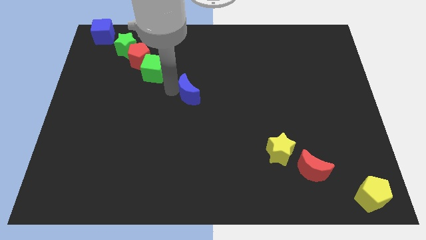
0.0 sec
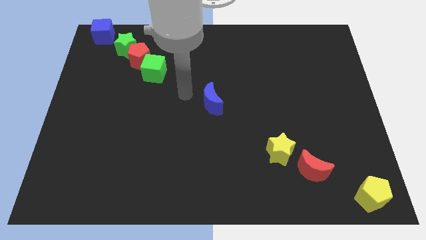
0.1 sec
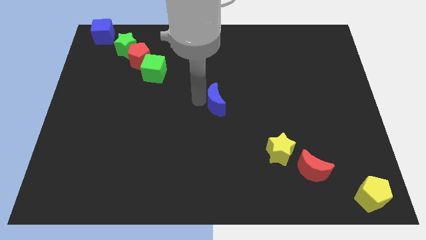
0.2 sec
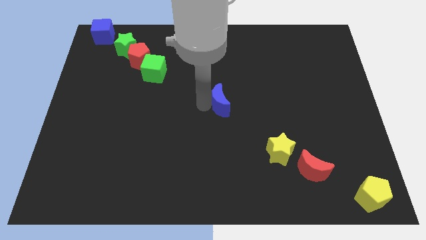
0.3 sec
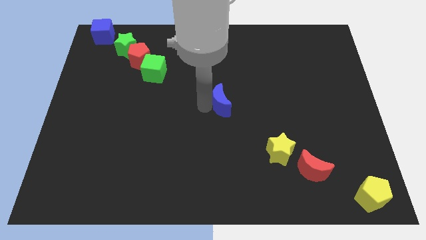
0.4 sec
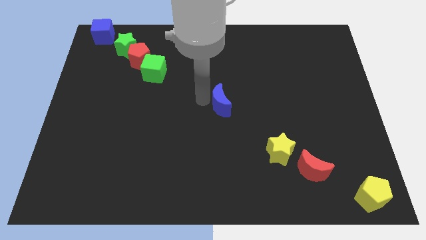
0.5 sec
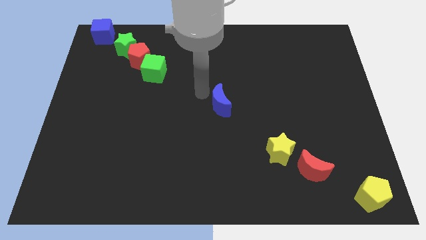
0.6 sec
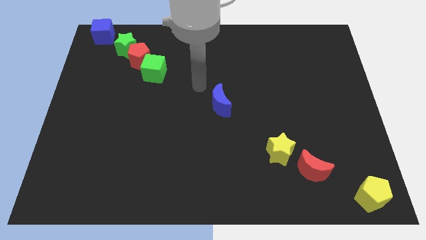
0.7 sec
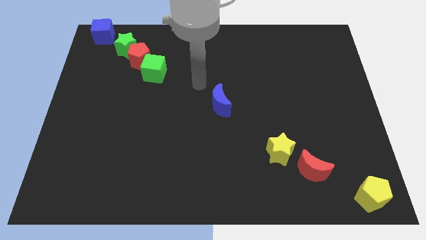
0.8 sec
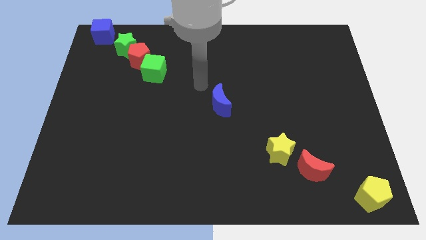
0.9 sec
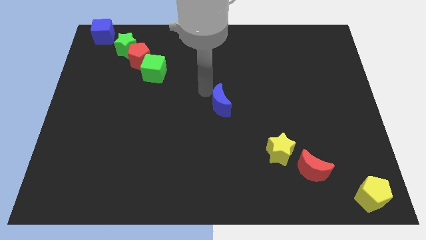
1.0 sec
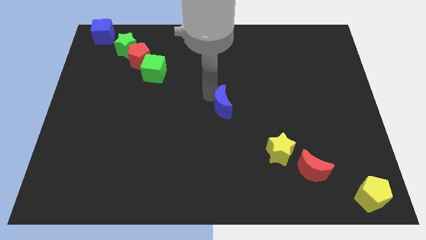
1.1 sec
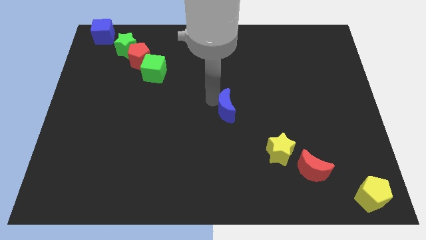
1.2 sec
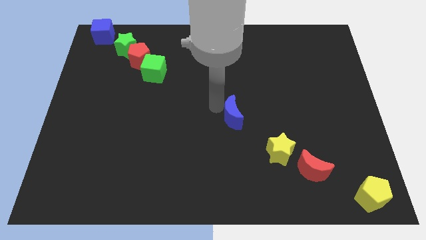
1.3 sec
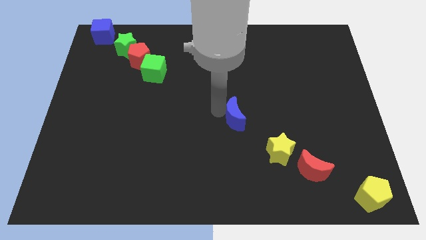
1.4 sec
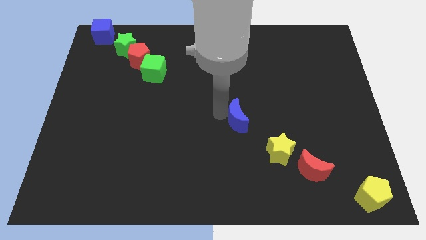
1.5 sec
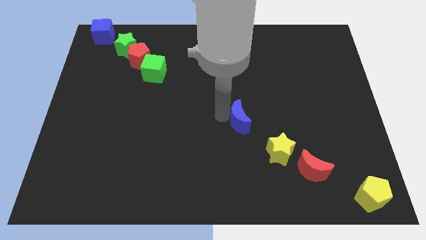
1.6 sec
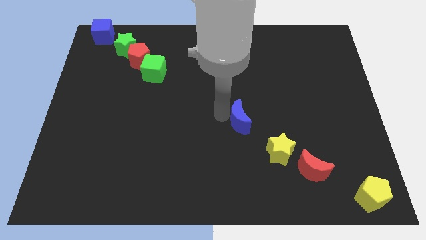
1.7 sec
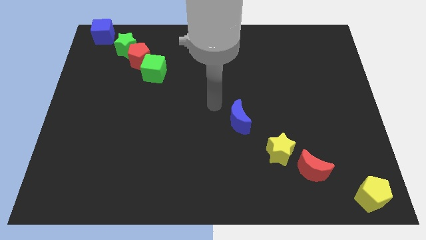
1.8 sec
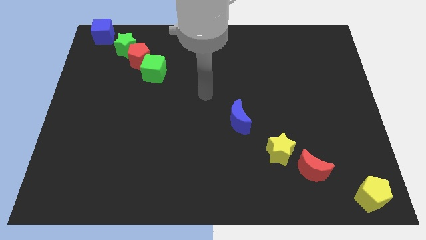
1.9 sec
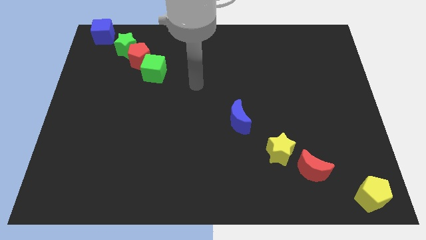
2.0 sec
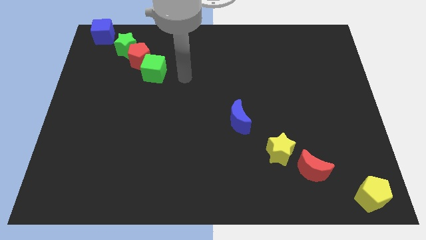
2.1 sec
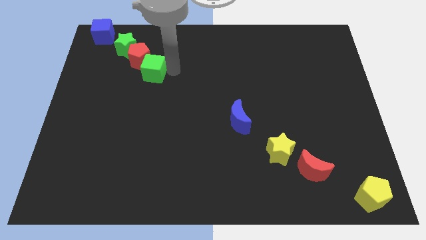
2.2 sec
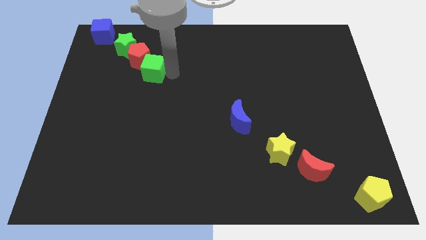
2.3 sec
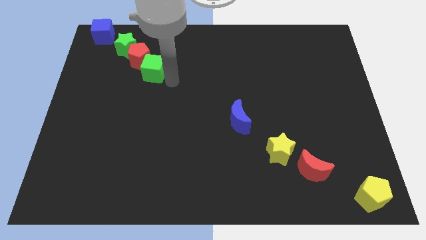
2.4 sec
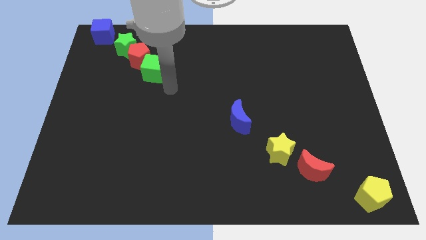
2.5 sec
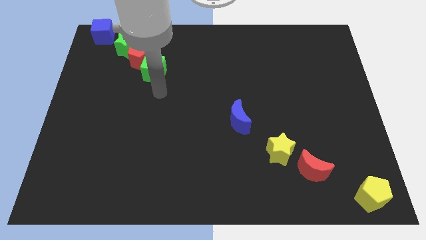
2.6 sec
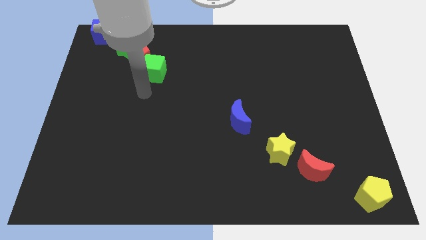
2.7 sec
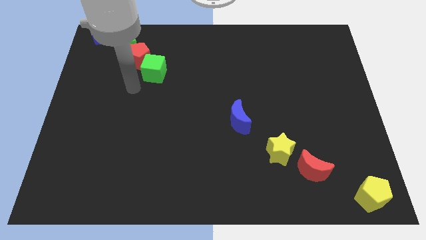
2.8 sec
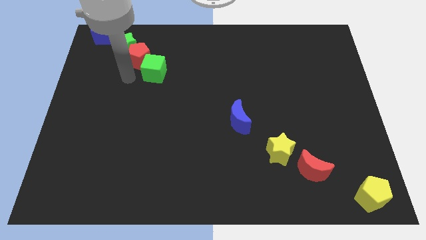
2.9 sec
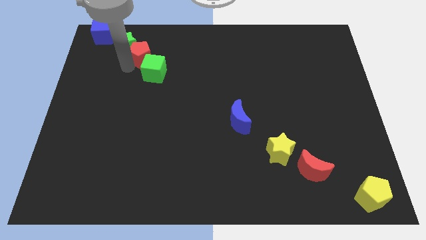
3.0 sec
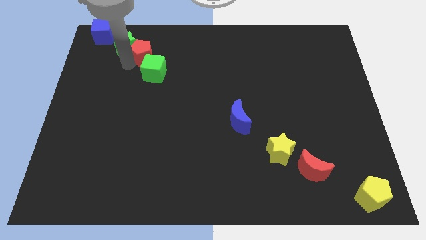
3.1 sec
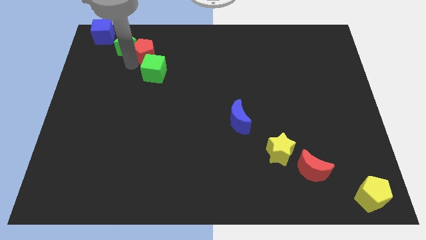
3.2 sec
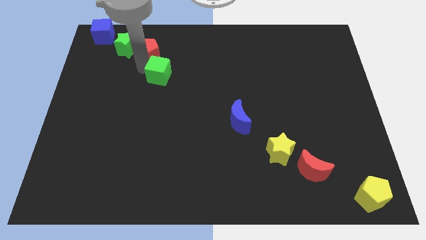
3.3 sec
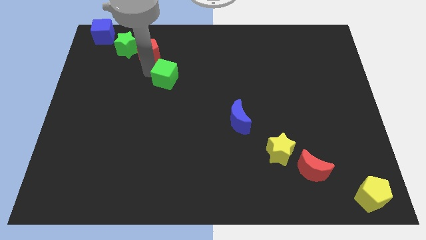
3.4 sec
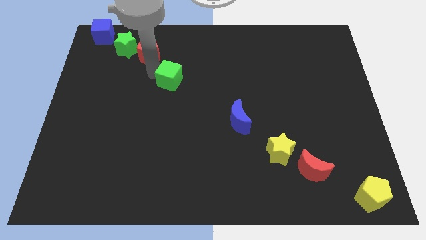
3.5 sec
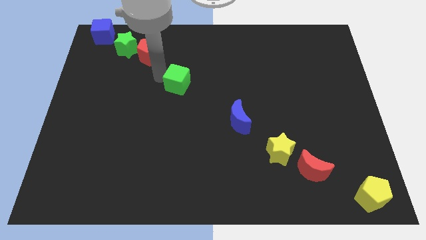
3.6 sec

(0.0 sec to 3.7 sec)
move the green cube diagonally above the blue moon

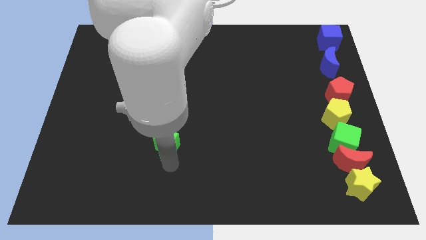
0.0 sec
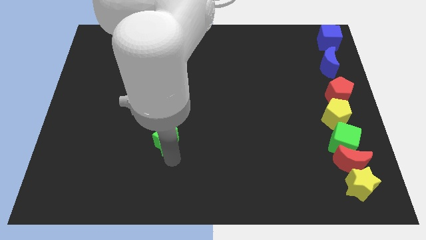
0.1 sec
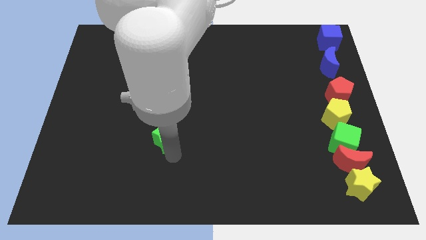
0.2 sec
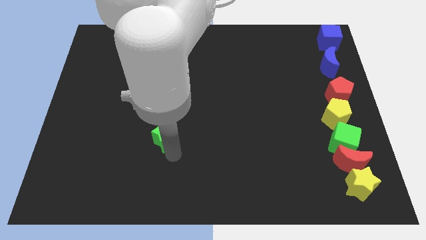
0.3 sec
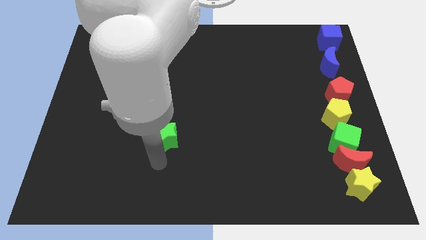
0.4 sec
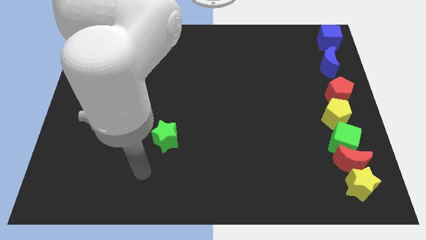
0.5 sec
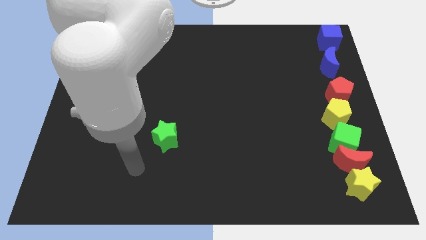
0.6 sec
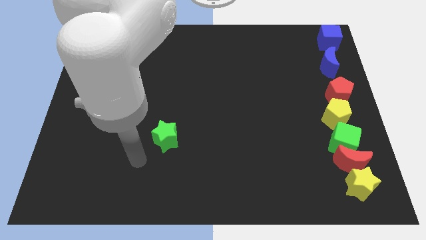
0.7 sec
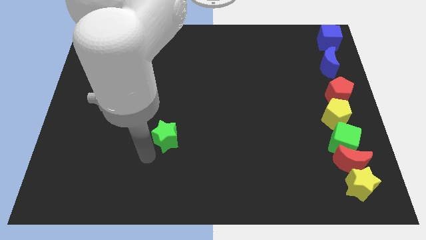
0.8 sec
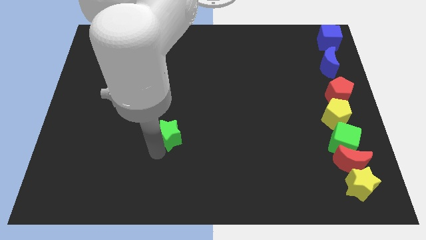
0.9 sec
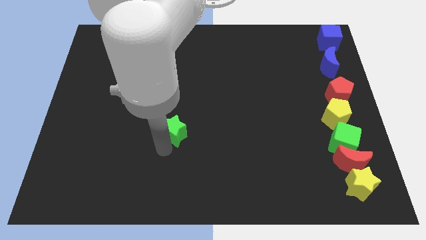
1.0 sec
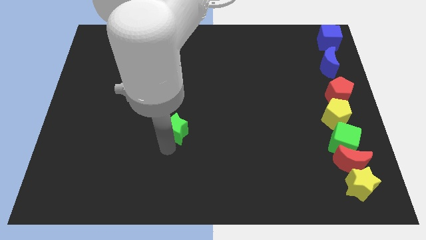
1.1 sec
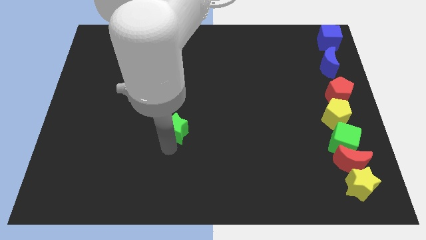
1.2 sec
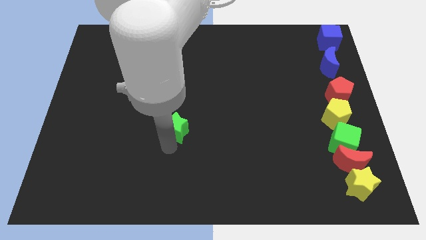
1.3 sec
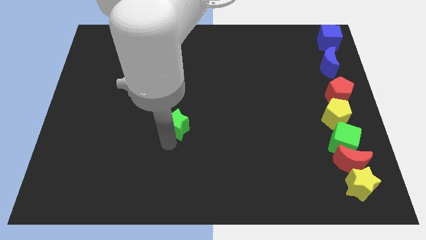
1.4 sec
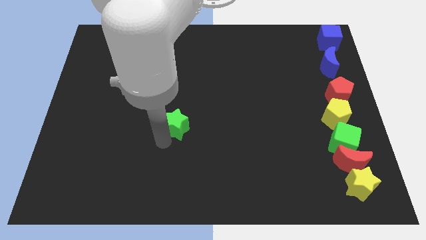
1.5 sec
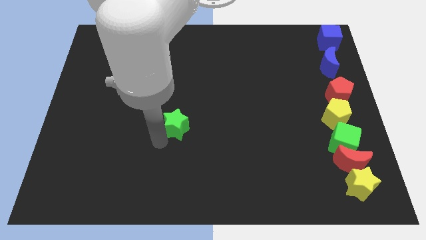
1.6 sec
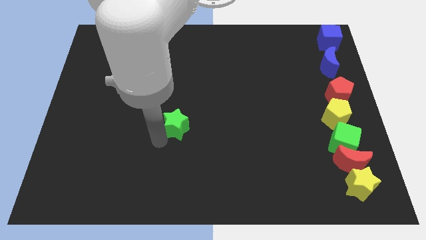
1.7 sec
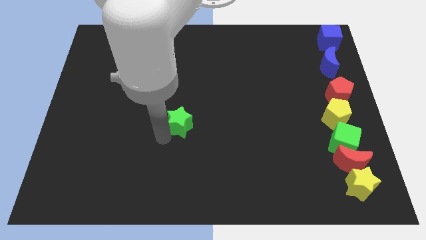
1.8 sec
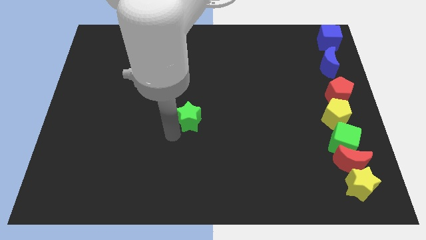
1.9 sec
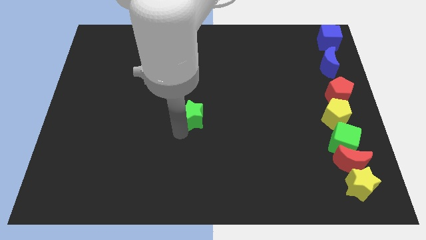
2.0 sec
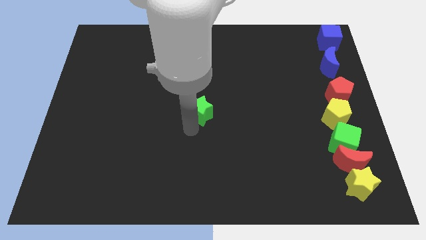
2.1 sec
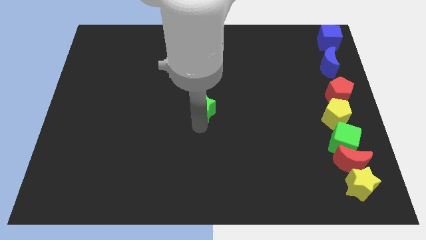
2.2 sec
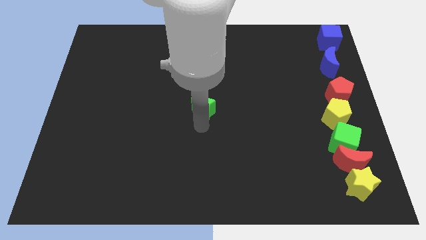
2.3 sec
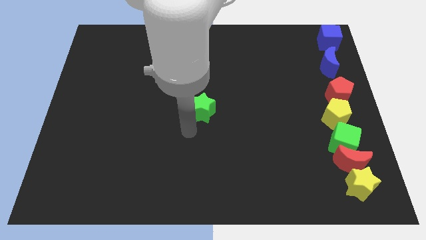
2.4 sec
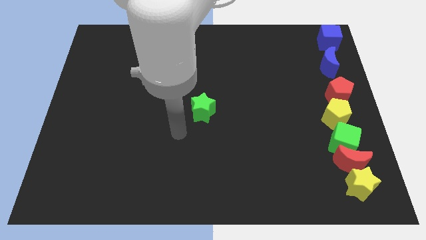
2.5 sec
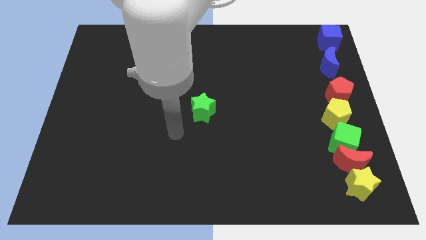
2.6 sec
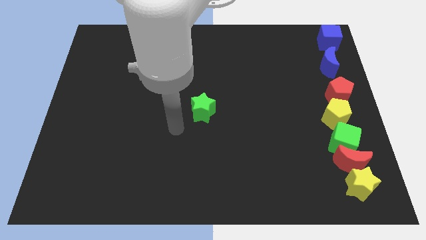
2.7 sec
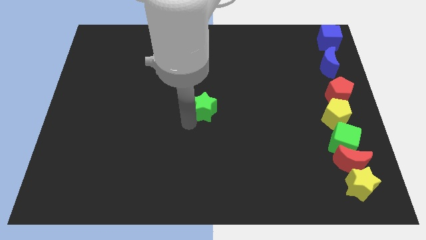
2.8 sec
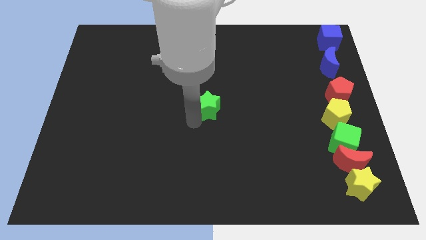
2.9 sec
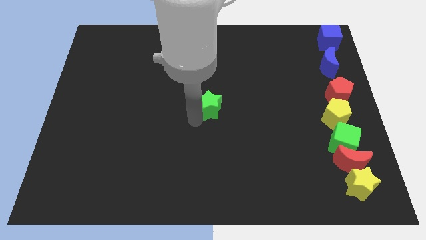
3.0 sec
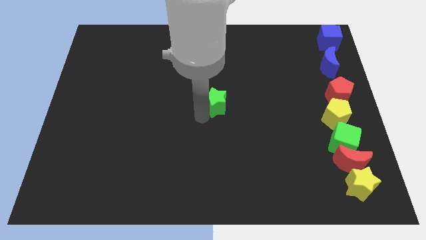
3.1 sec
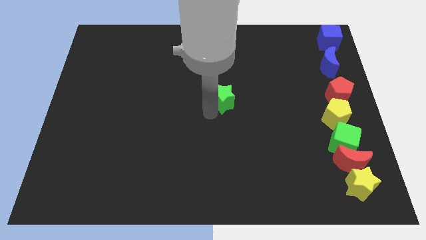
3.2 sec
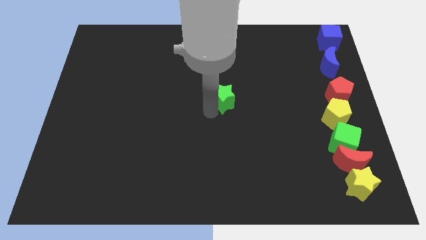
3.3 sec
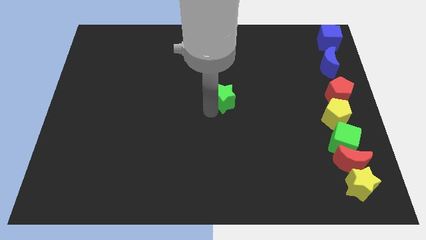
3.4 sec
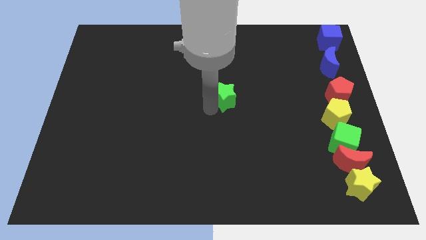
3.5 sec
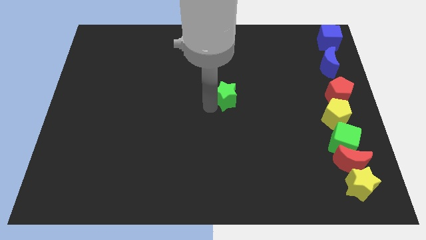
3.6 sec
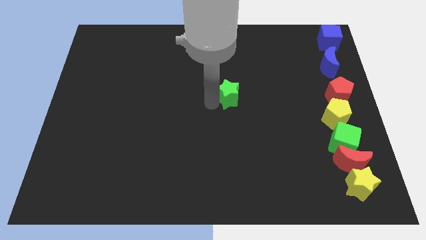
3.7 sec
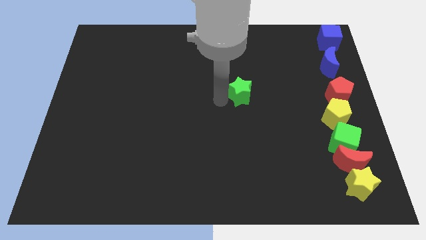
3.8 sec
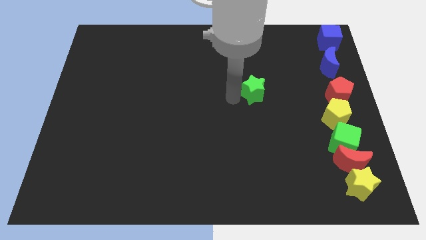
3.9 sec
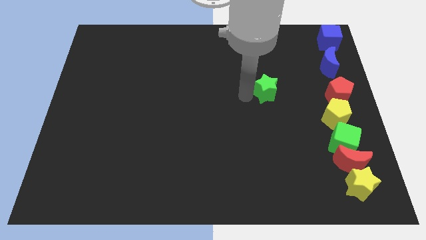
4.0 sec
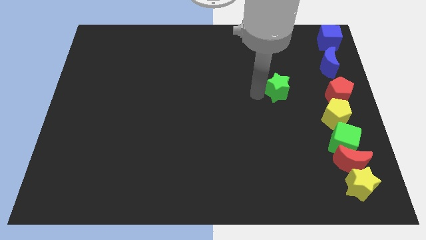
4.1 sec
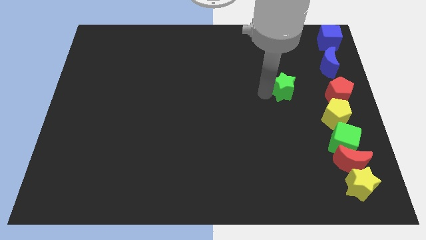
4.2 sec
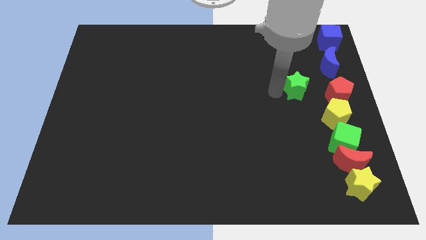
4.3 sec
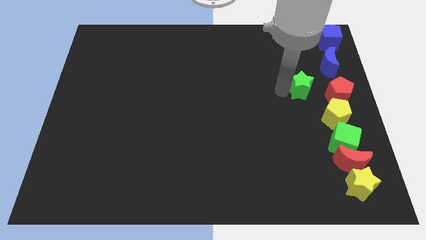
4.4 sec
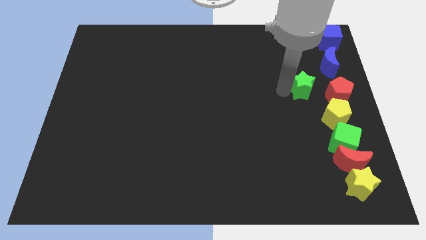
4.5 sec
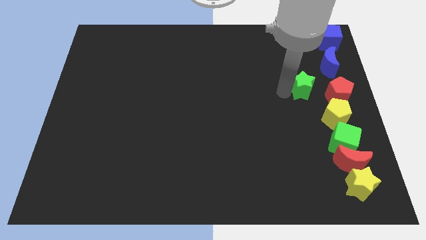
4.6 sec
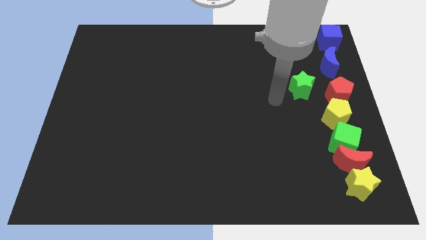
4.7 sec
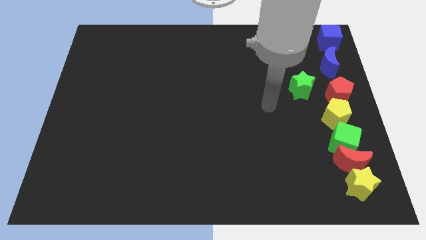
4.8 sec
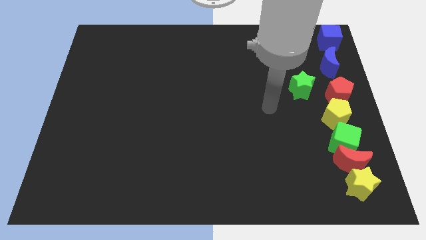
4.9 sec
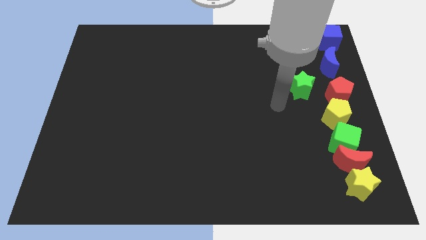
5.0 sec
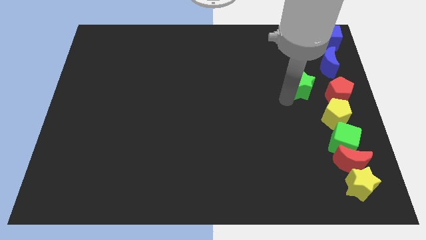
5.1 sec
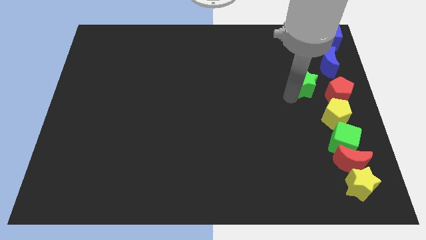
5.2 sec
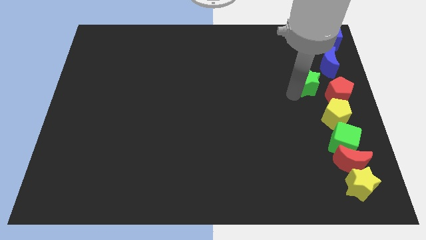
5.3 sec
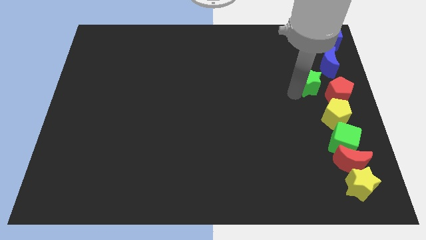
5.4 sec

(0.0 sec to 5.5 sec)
push the green star close to the red pentagon
